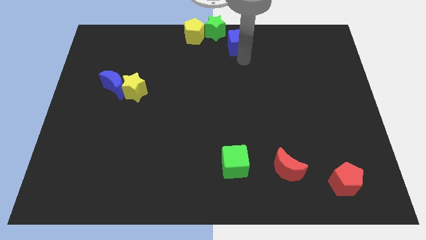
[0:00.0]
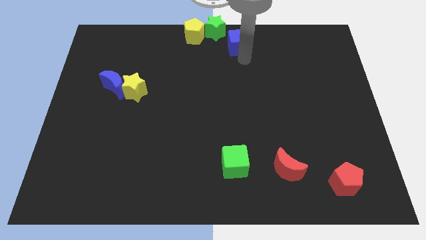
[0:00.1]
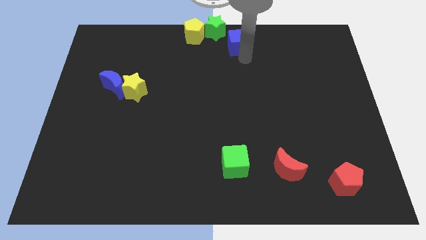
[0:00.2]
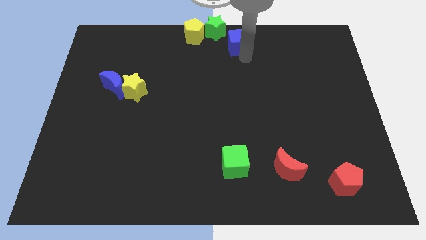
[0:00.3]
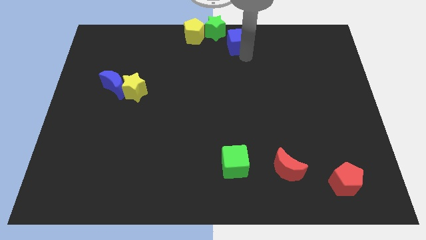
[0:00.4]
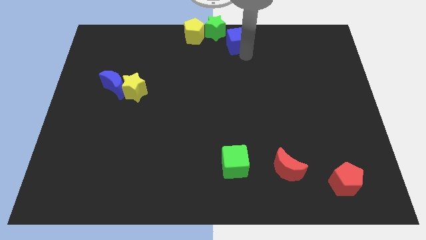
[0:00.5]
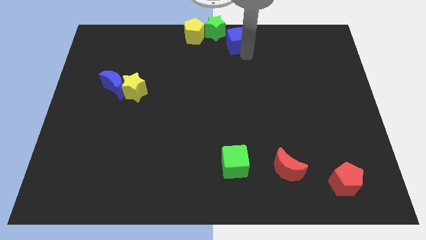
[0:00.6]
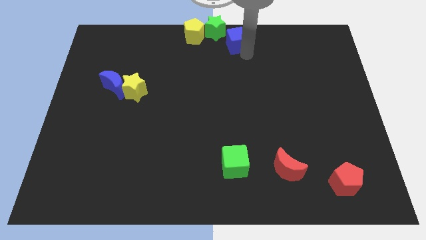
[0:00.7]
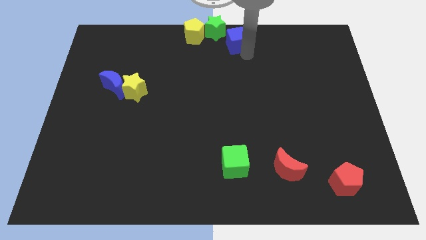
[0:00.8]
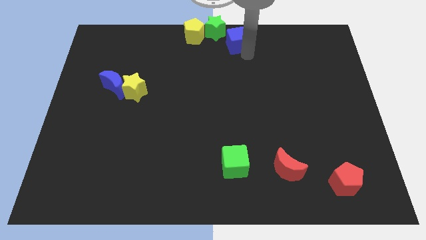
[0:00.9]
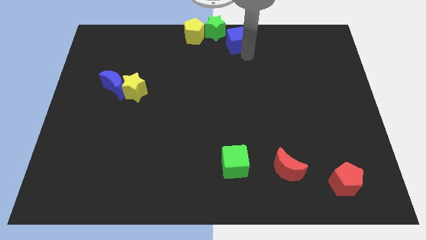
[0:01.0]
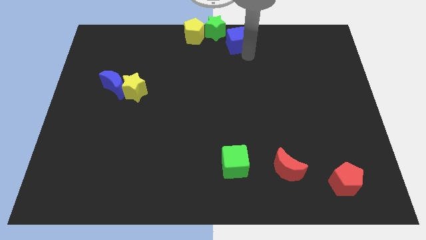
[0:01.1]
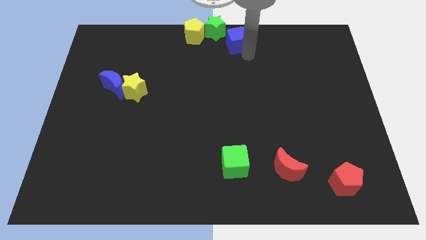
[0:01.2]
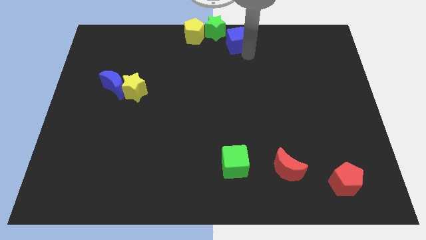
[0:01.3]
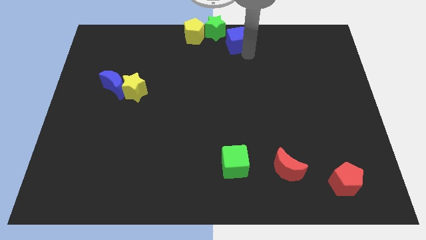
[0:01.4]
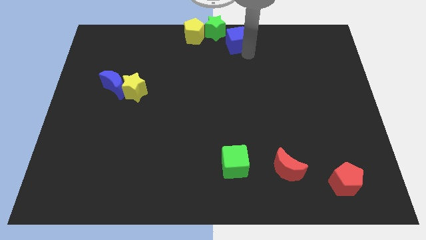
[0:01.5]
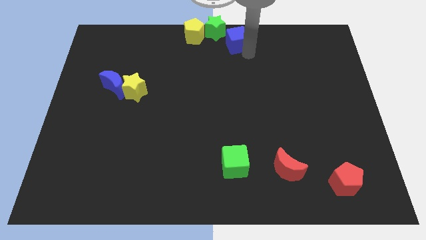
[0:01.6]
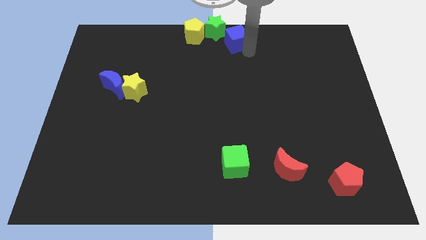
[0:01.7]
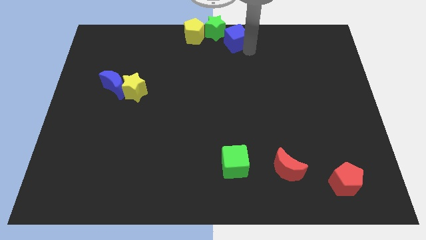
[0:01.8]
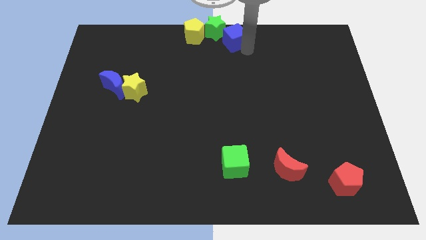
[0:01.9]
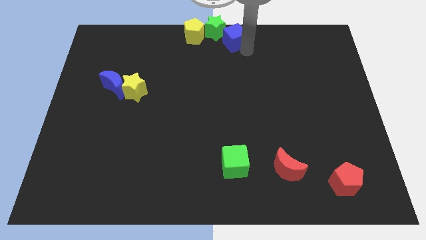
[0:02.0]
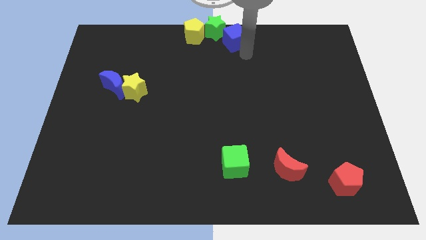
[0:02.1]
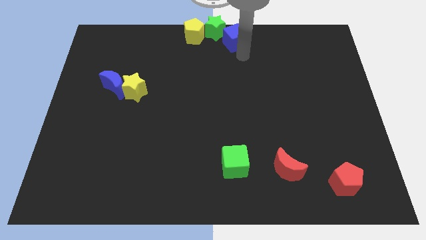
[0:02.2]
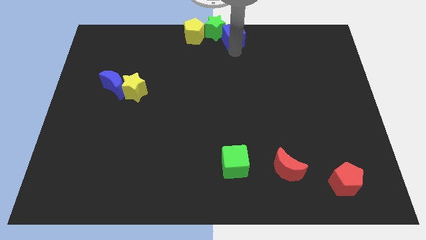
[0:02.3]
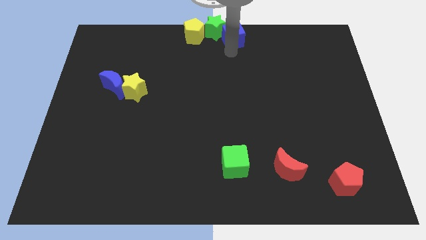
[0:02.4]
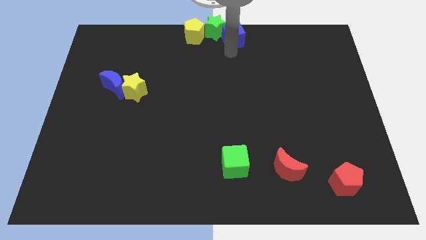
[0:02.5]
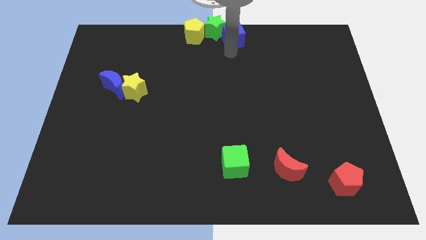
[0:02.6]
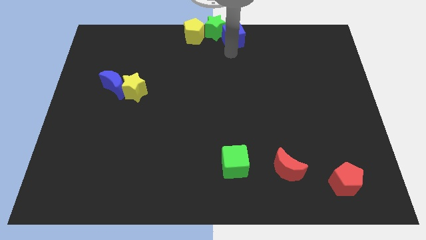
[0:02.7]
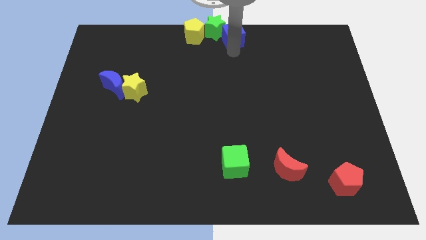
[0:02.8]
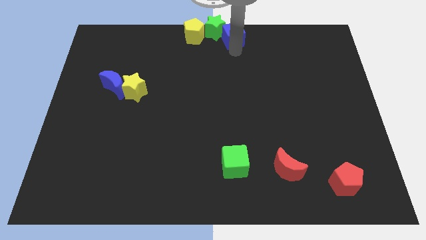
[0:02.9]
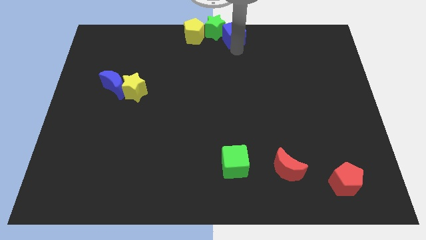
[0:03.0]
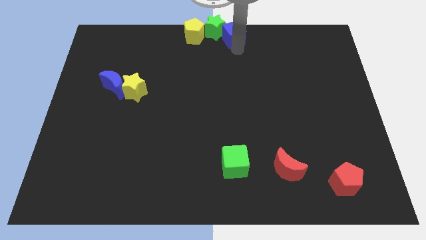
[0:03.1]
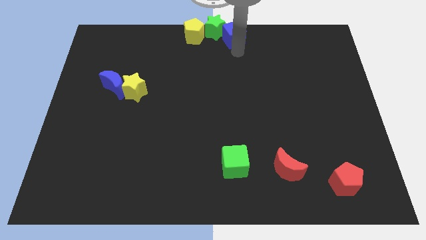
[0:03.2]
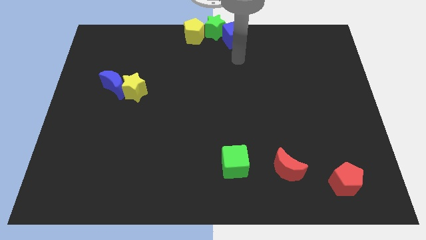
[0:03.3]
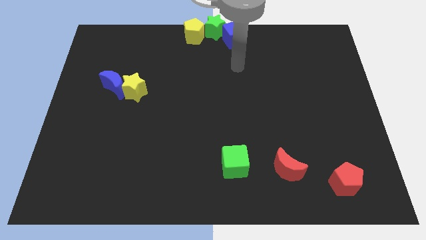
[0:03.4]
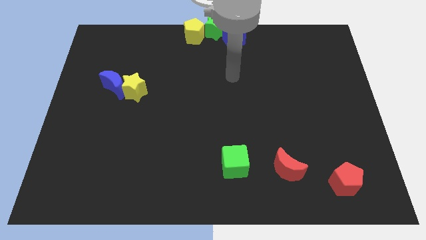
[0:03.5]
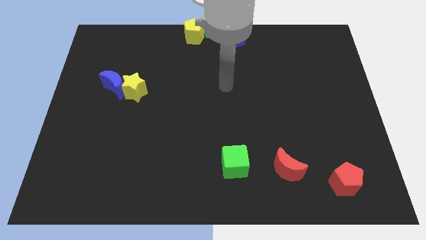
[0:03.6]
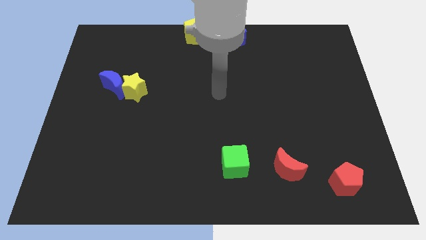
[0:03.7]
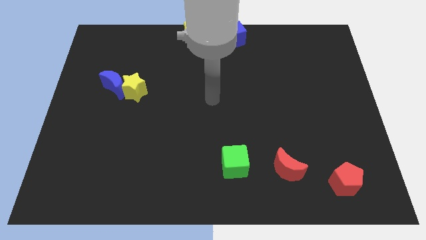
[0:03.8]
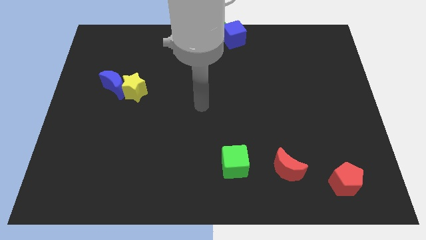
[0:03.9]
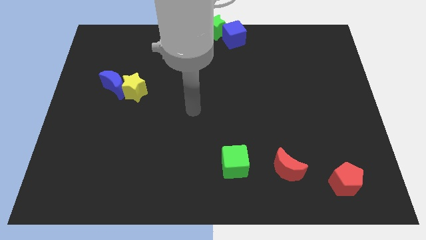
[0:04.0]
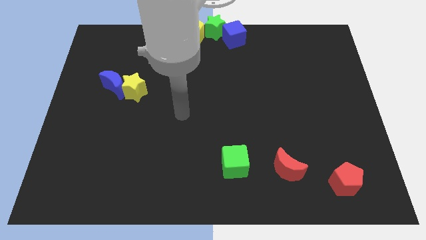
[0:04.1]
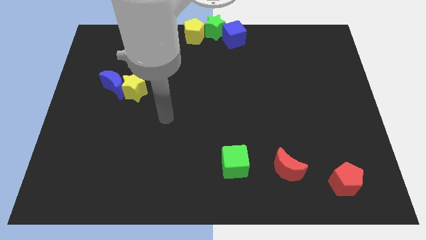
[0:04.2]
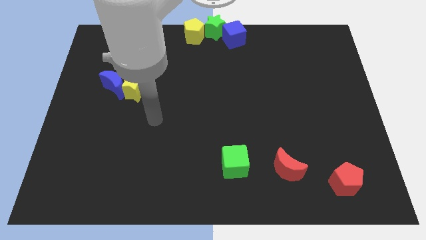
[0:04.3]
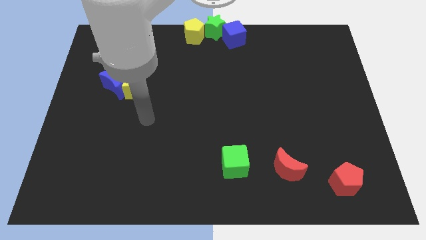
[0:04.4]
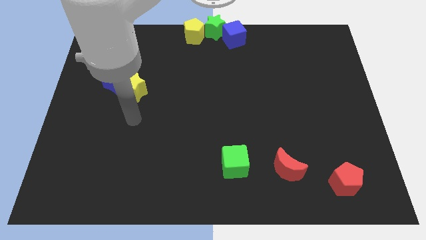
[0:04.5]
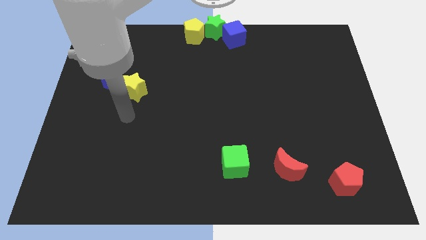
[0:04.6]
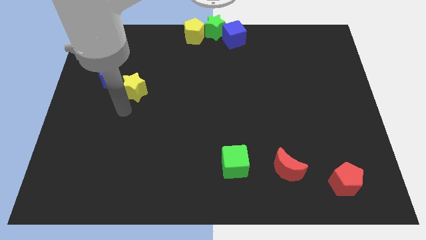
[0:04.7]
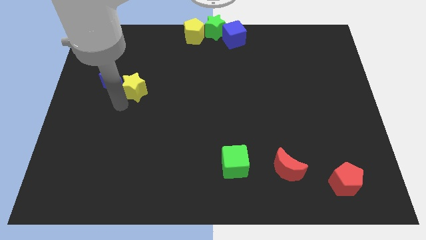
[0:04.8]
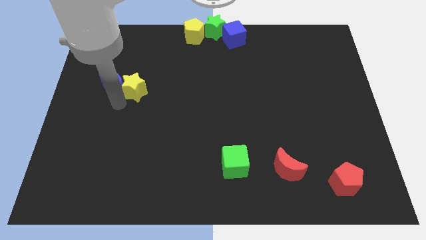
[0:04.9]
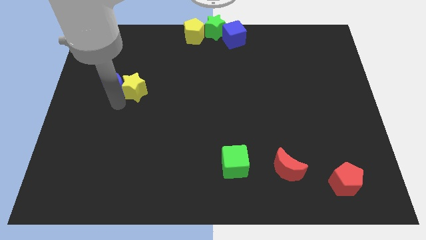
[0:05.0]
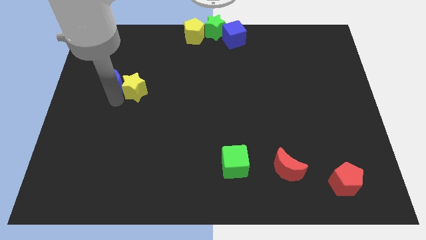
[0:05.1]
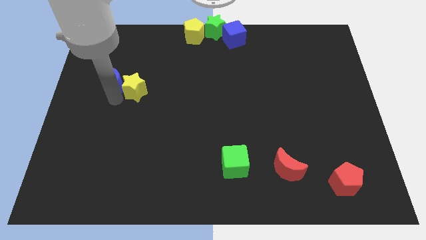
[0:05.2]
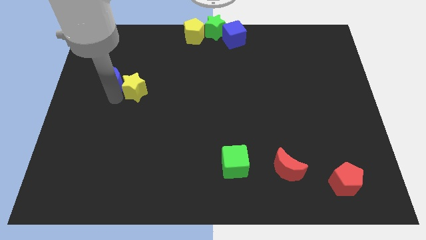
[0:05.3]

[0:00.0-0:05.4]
push the blue cube into the green star

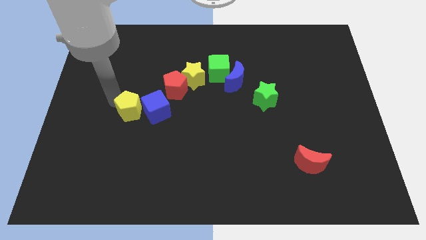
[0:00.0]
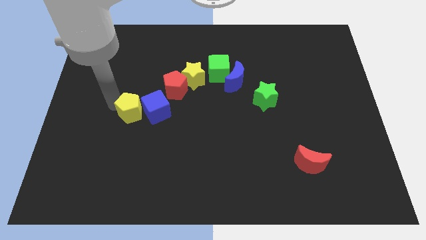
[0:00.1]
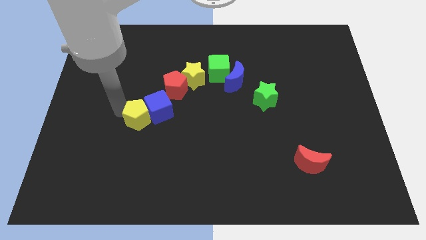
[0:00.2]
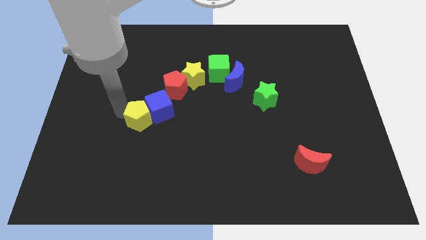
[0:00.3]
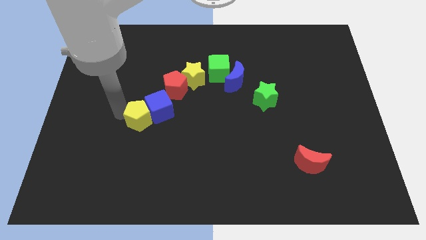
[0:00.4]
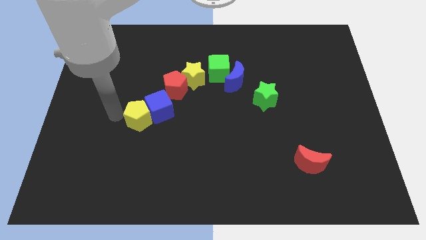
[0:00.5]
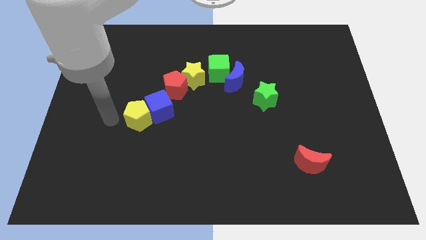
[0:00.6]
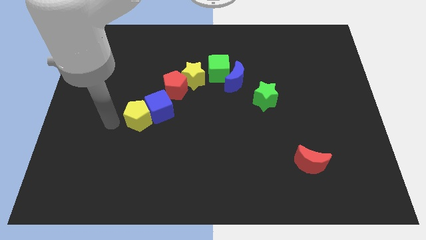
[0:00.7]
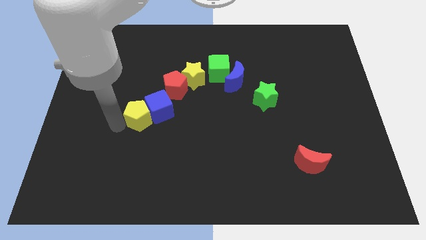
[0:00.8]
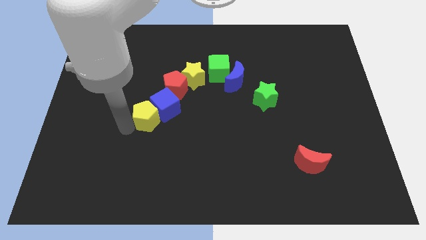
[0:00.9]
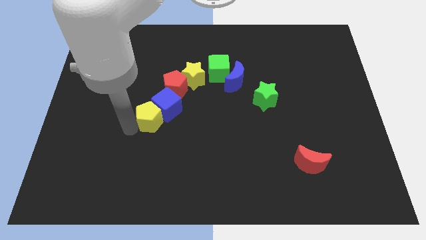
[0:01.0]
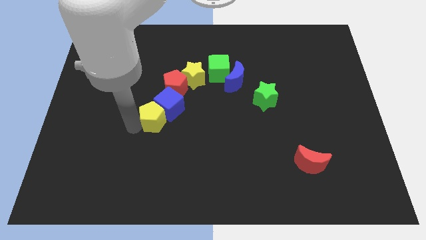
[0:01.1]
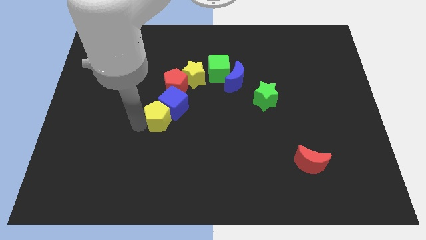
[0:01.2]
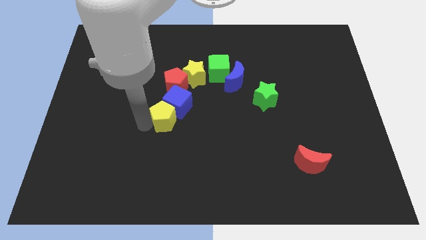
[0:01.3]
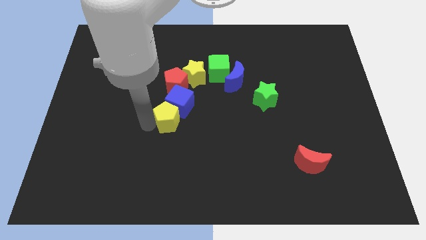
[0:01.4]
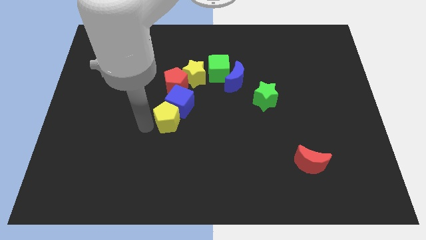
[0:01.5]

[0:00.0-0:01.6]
push the yellow pentagon into the blue cube

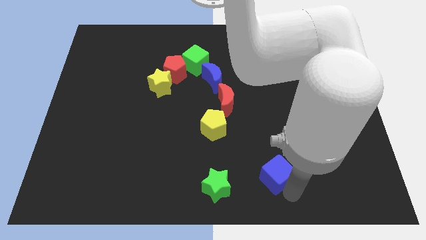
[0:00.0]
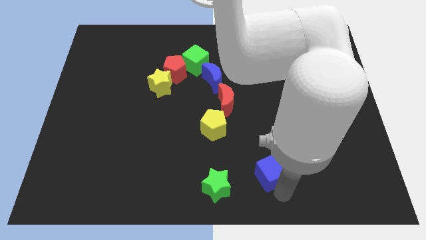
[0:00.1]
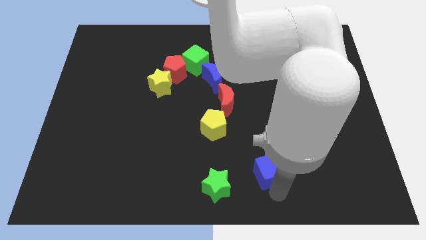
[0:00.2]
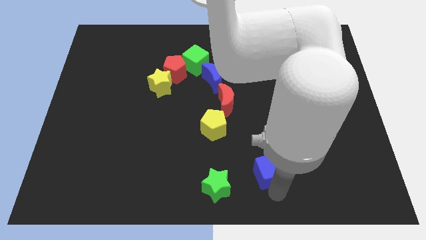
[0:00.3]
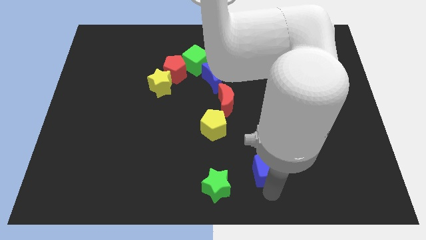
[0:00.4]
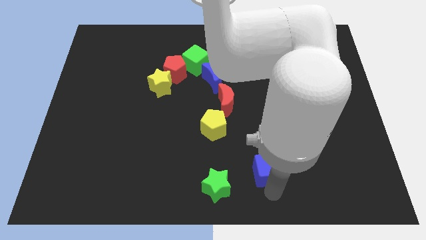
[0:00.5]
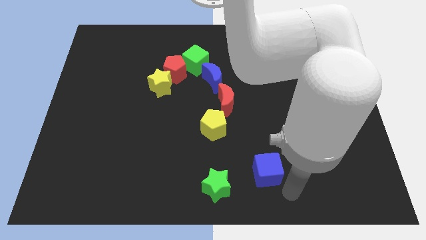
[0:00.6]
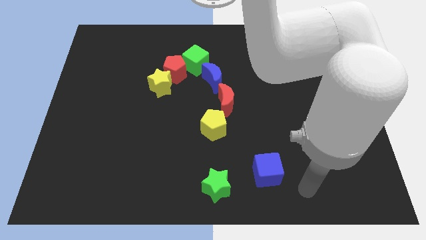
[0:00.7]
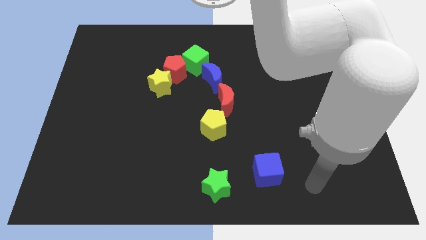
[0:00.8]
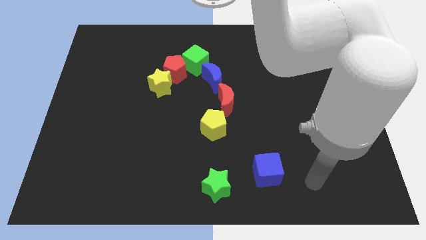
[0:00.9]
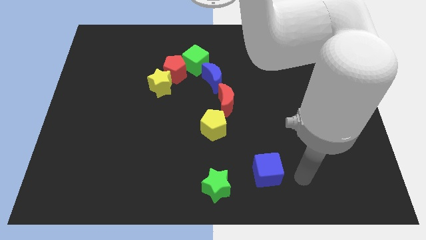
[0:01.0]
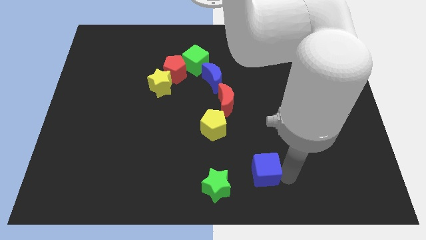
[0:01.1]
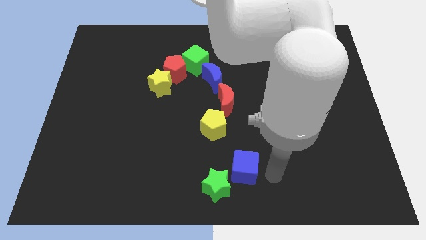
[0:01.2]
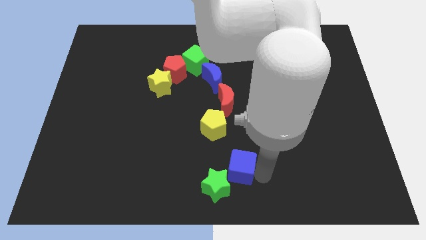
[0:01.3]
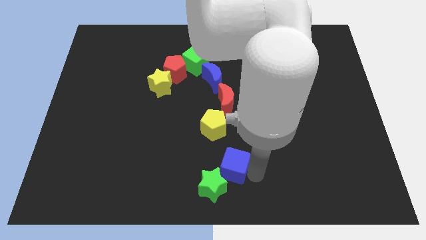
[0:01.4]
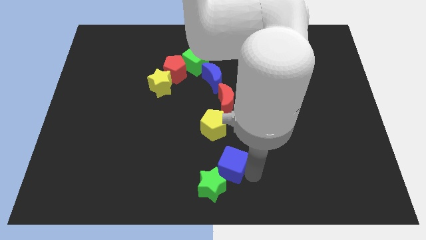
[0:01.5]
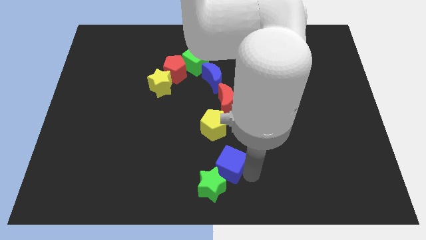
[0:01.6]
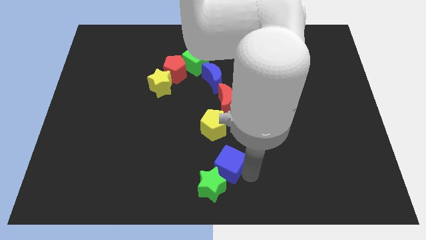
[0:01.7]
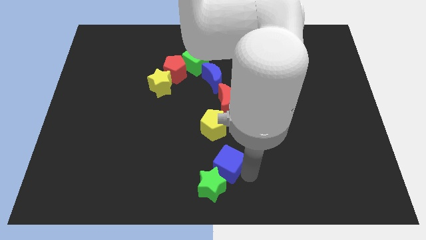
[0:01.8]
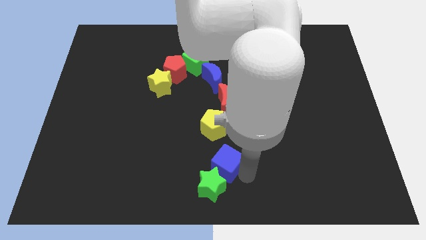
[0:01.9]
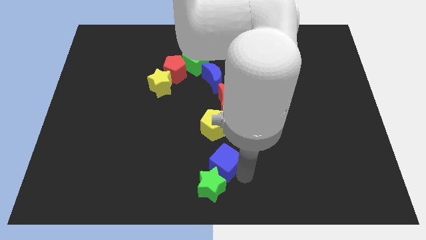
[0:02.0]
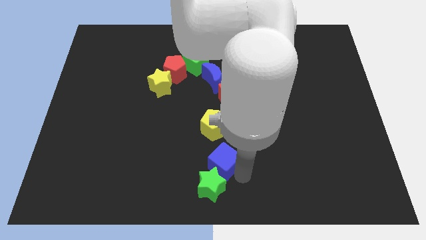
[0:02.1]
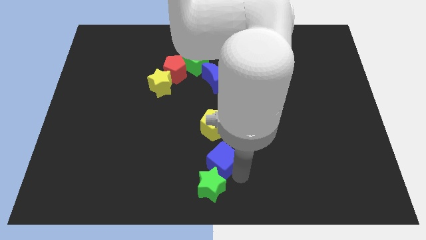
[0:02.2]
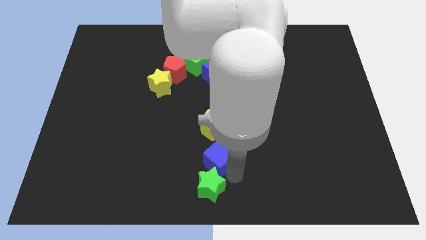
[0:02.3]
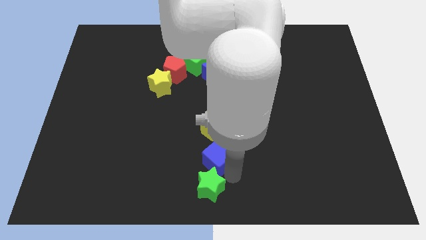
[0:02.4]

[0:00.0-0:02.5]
place the blue cube above the green star
